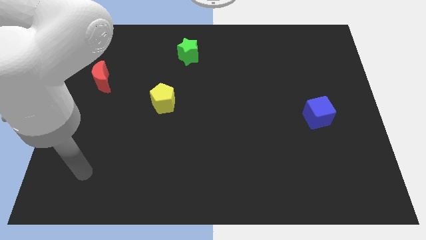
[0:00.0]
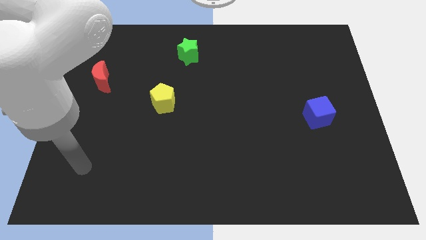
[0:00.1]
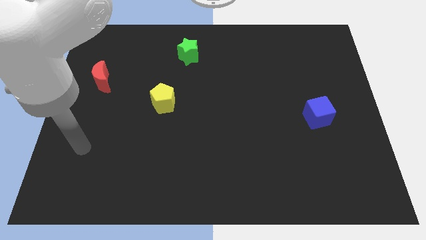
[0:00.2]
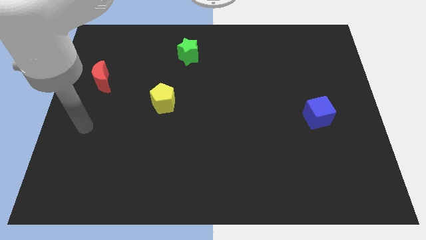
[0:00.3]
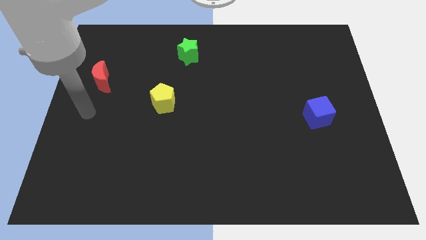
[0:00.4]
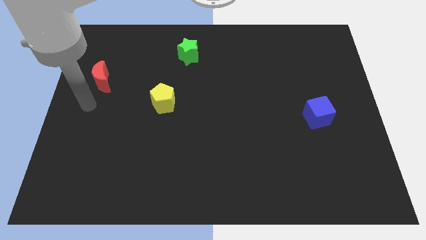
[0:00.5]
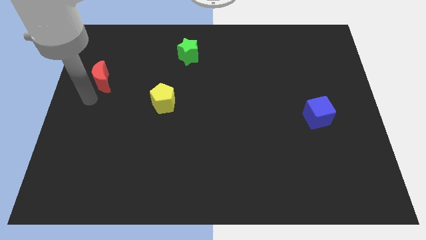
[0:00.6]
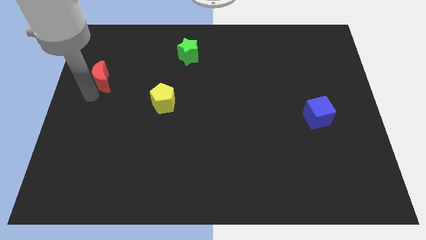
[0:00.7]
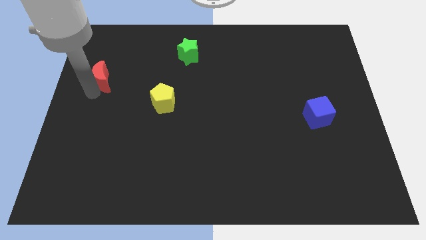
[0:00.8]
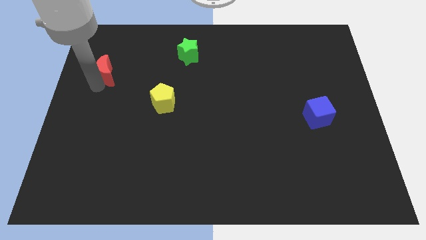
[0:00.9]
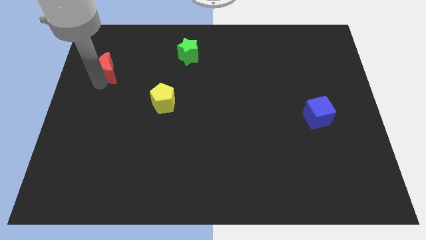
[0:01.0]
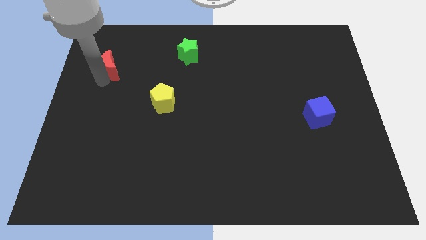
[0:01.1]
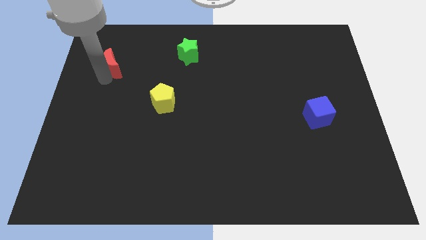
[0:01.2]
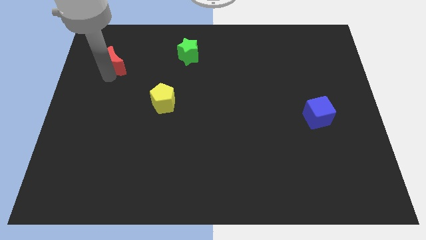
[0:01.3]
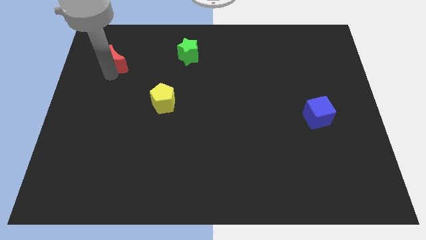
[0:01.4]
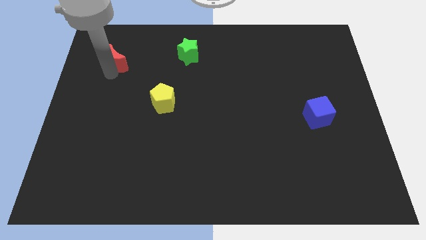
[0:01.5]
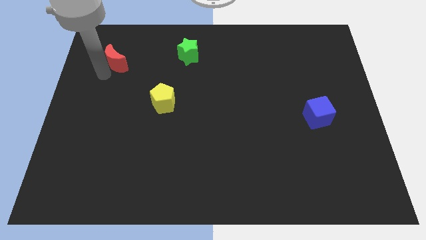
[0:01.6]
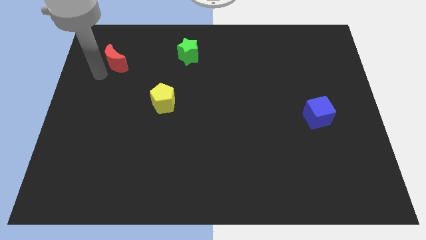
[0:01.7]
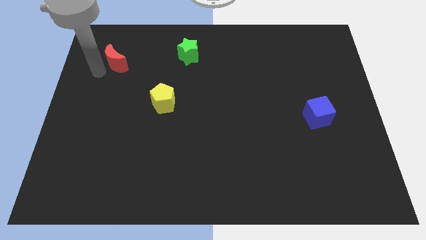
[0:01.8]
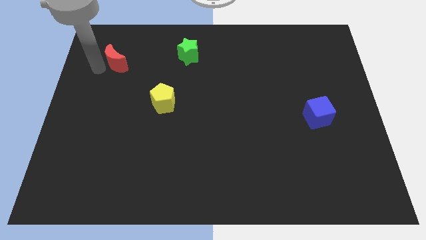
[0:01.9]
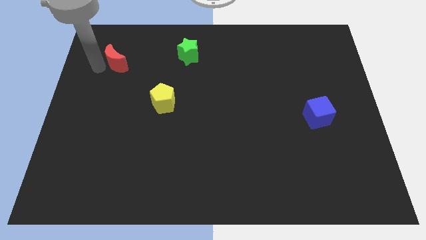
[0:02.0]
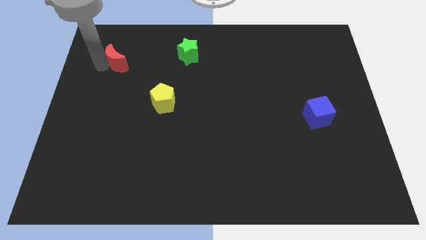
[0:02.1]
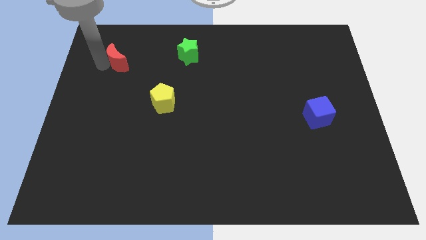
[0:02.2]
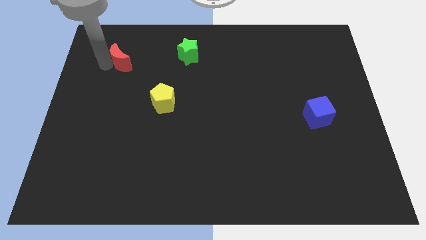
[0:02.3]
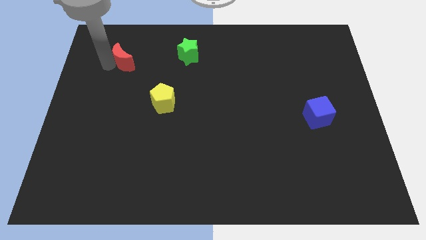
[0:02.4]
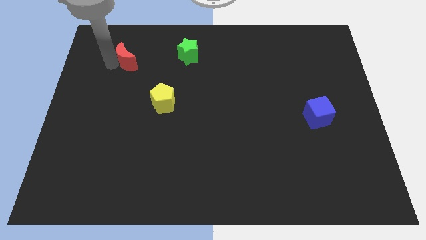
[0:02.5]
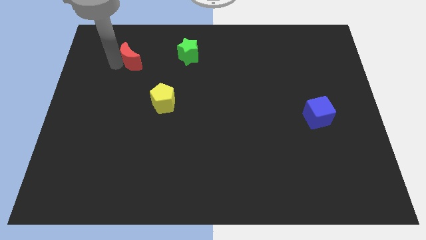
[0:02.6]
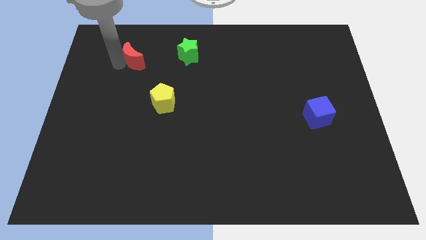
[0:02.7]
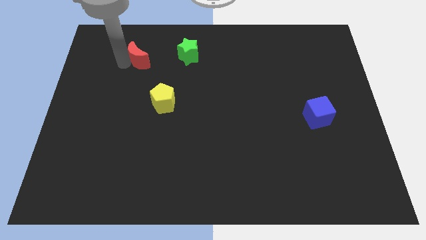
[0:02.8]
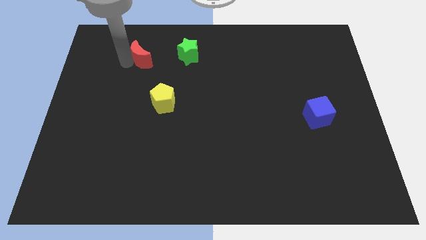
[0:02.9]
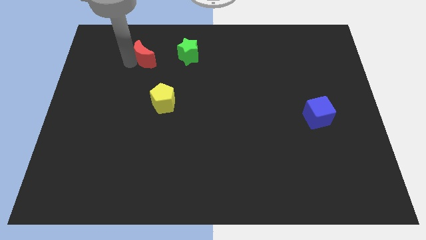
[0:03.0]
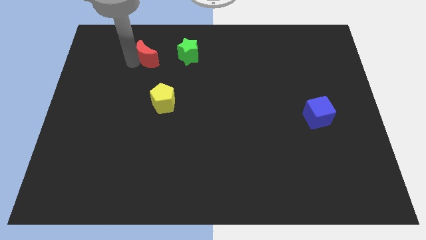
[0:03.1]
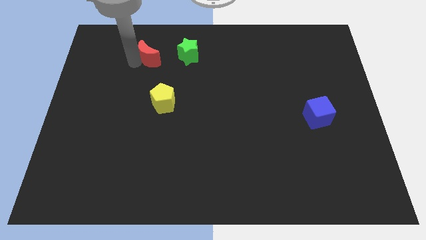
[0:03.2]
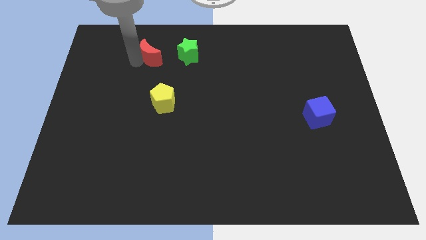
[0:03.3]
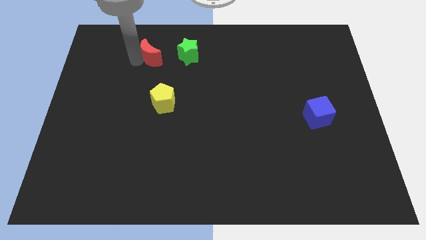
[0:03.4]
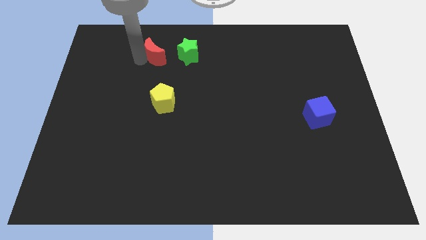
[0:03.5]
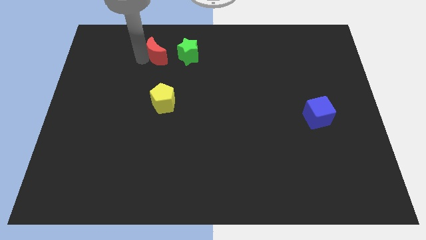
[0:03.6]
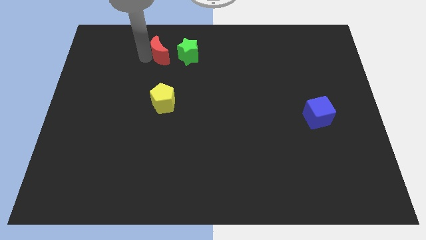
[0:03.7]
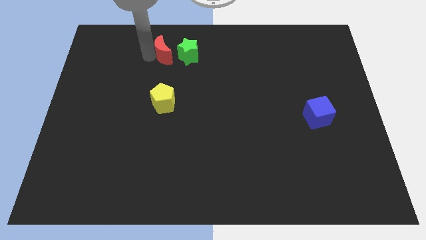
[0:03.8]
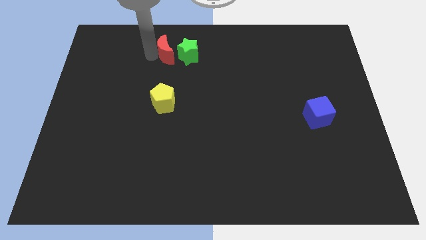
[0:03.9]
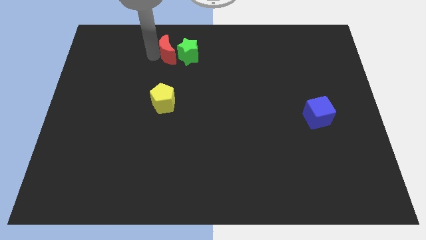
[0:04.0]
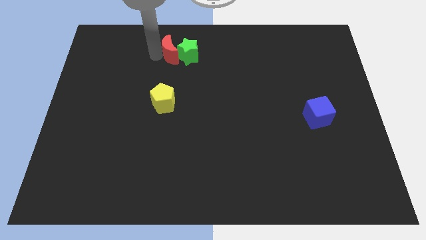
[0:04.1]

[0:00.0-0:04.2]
slide the red block to the green block

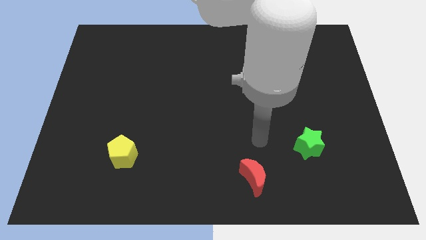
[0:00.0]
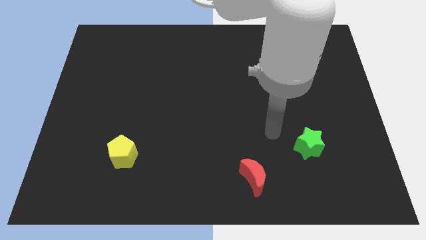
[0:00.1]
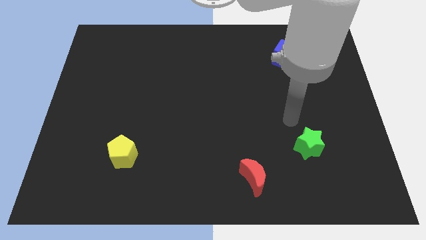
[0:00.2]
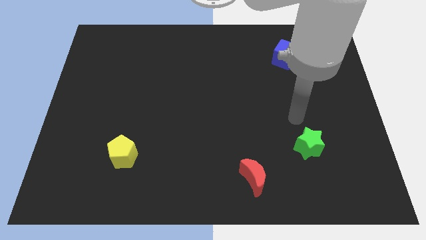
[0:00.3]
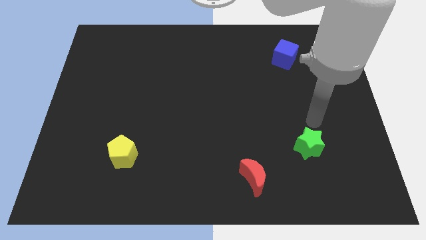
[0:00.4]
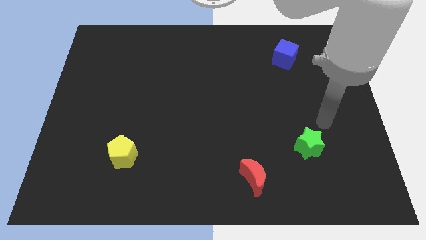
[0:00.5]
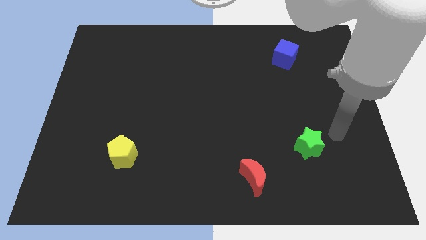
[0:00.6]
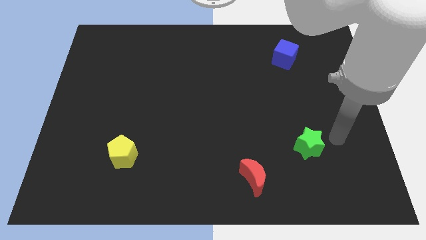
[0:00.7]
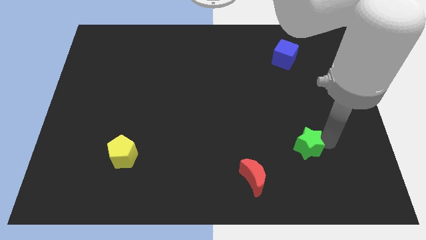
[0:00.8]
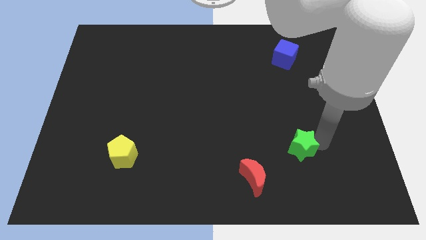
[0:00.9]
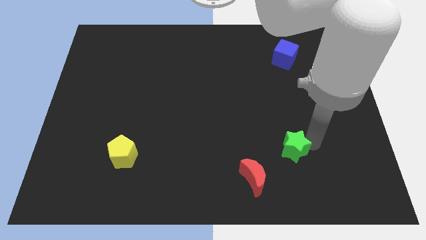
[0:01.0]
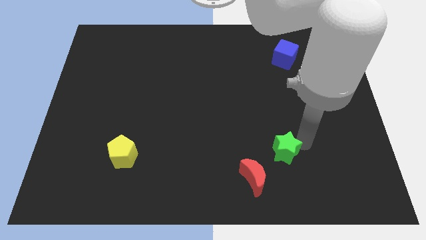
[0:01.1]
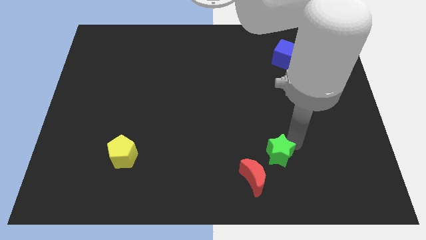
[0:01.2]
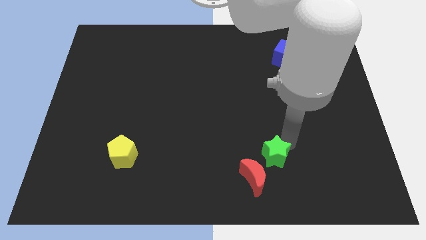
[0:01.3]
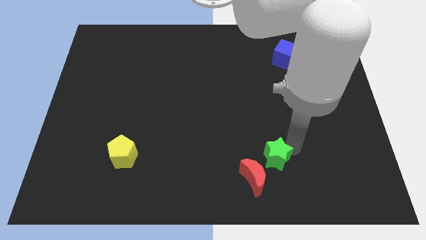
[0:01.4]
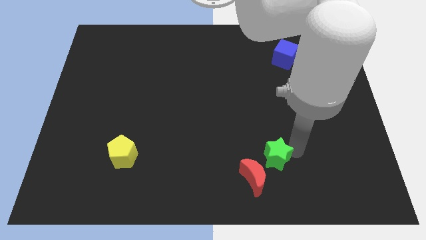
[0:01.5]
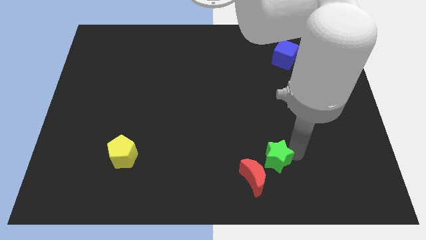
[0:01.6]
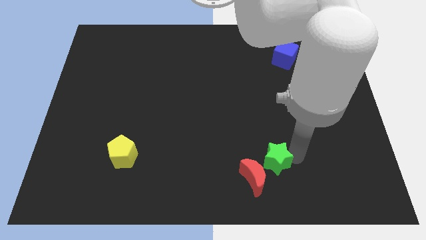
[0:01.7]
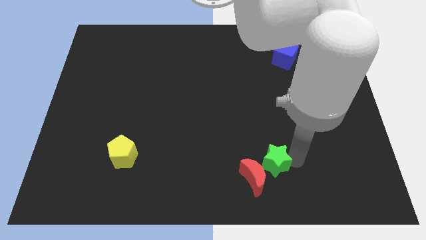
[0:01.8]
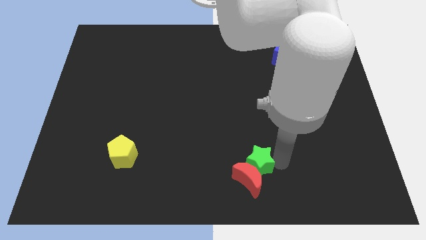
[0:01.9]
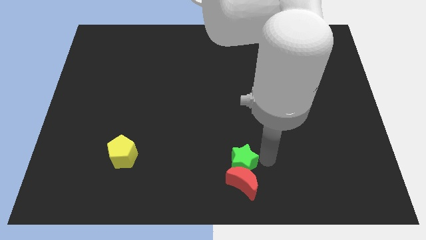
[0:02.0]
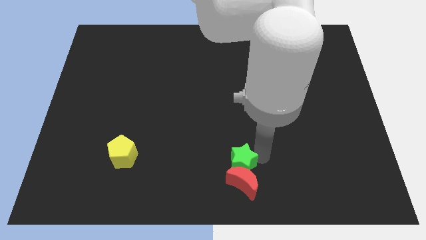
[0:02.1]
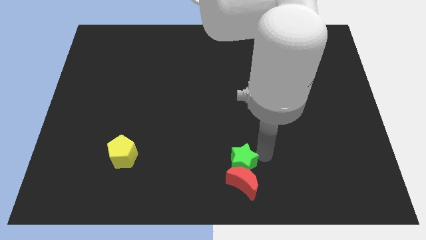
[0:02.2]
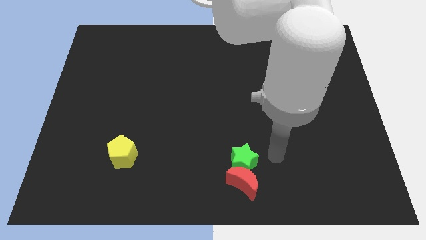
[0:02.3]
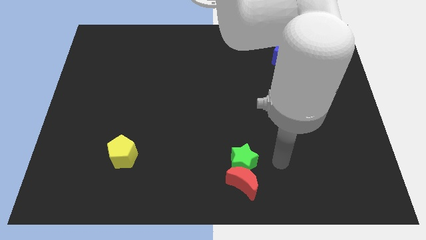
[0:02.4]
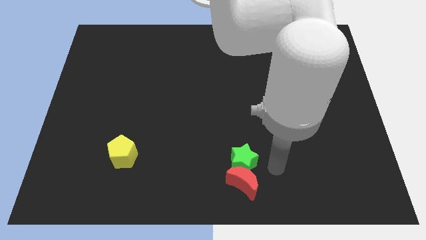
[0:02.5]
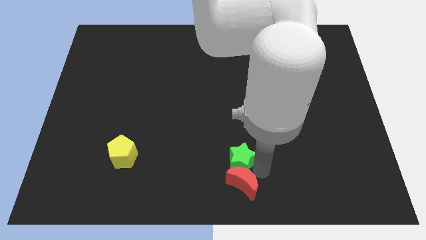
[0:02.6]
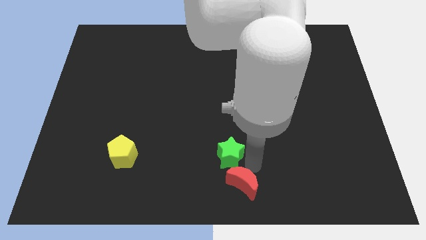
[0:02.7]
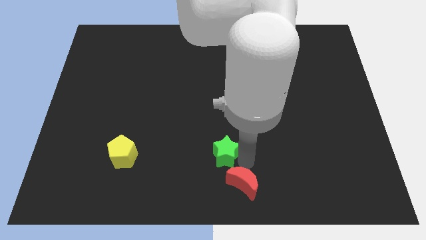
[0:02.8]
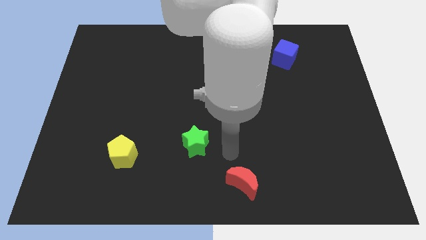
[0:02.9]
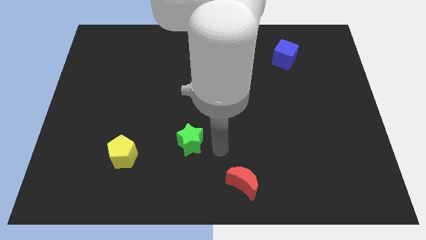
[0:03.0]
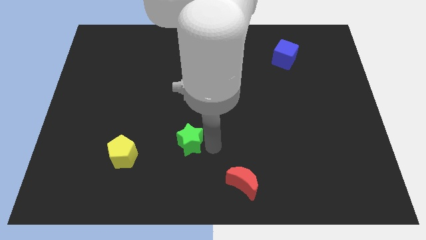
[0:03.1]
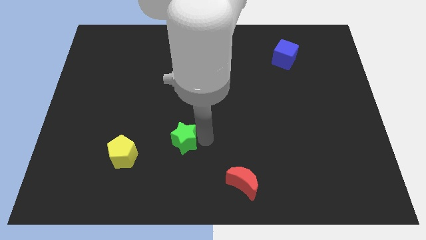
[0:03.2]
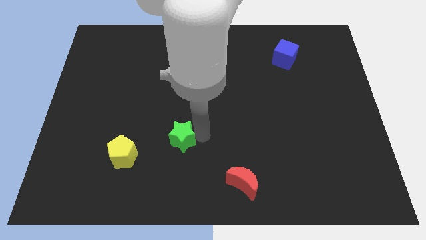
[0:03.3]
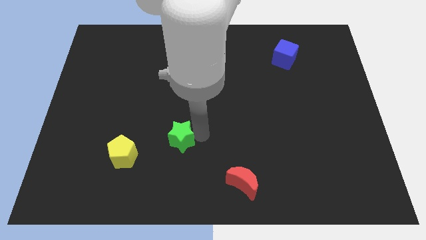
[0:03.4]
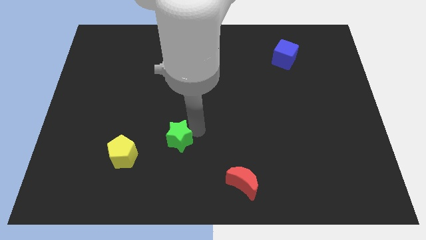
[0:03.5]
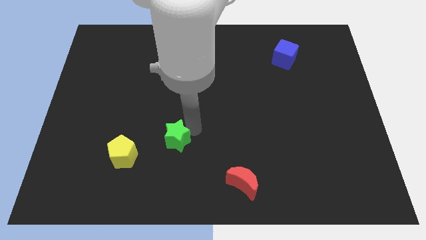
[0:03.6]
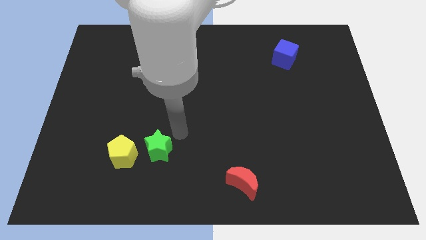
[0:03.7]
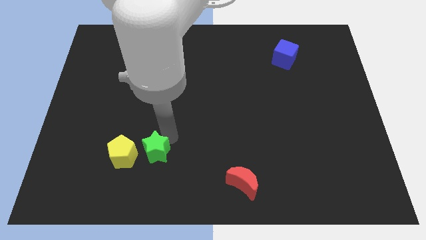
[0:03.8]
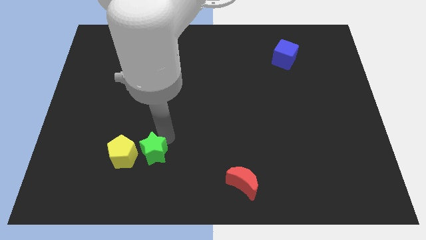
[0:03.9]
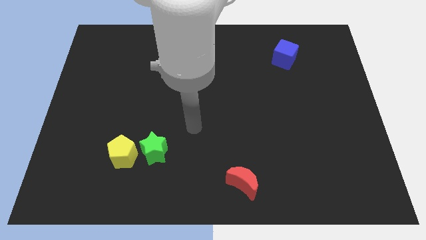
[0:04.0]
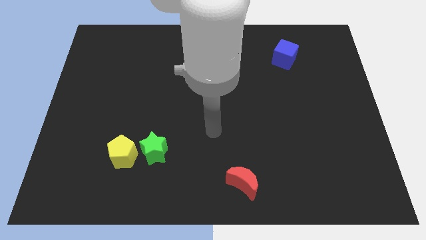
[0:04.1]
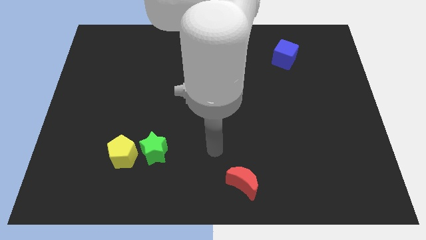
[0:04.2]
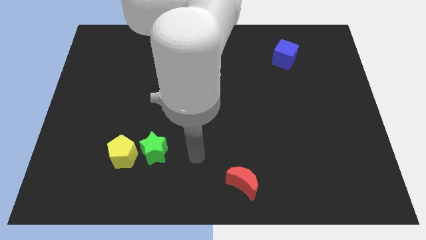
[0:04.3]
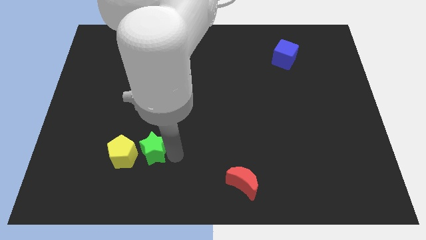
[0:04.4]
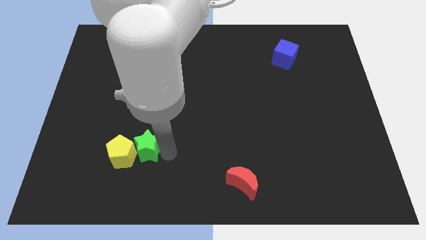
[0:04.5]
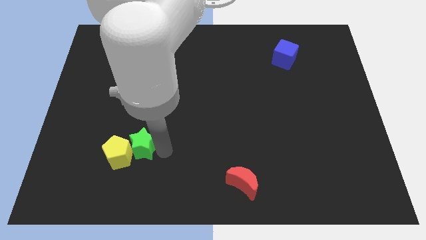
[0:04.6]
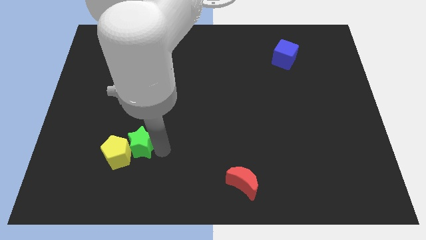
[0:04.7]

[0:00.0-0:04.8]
move the star next to the yellow block
